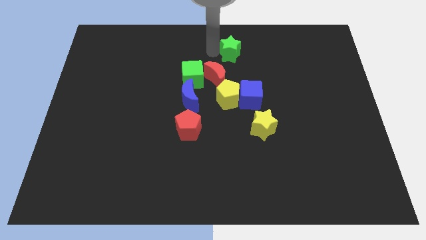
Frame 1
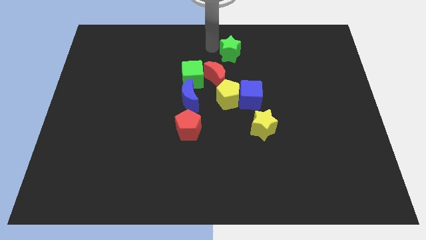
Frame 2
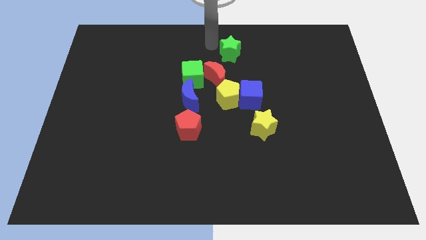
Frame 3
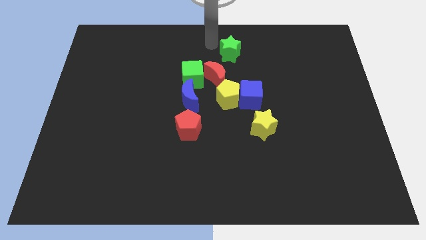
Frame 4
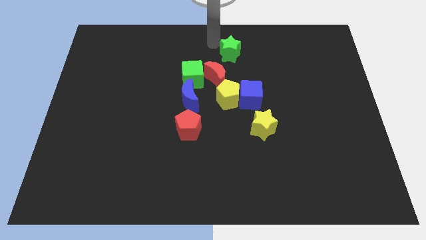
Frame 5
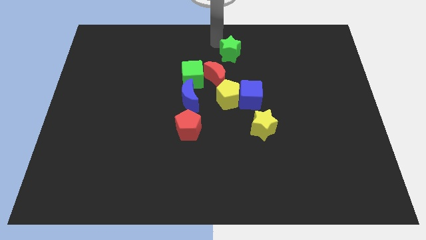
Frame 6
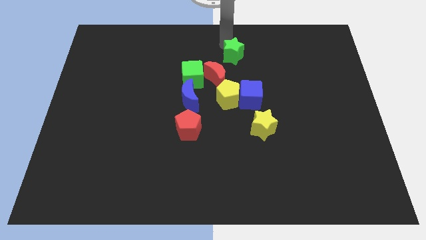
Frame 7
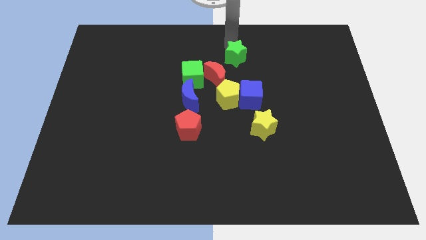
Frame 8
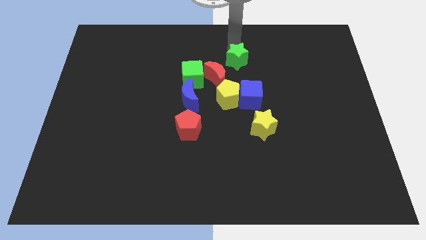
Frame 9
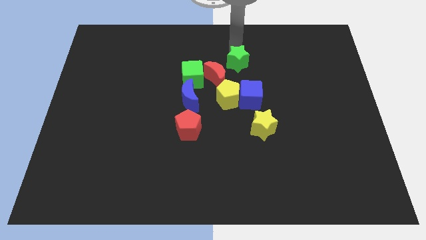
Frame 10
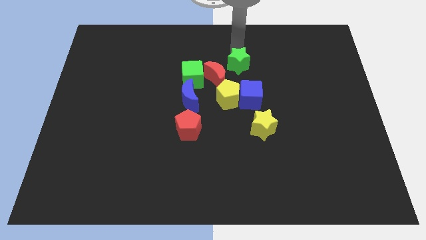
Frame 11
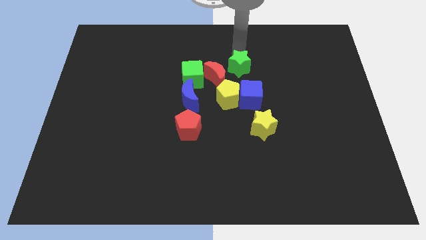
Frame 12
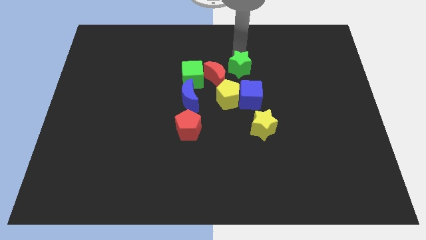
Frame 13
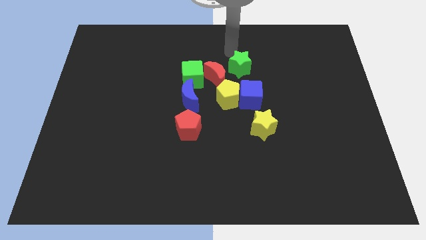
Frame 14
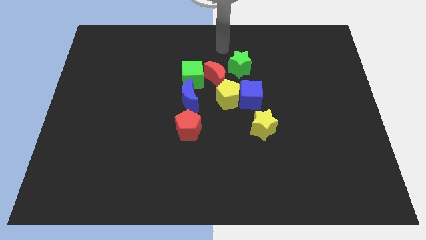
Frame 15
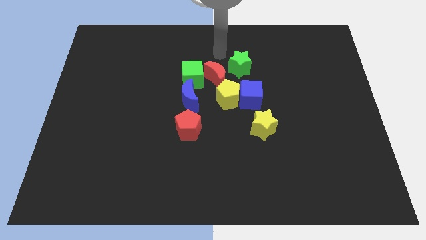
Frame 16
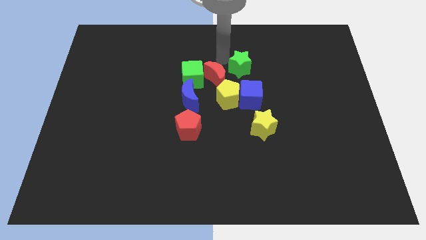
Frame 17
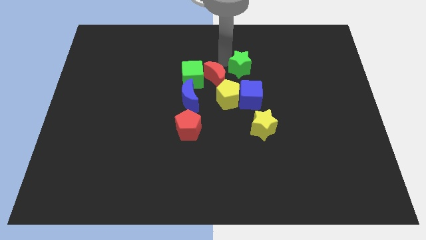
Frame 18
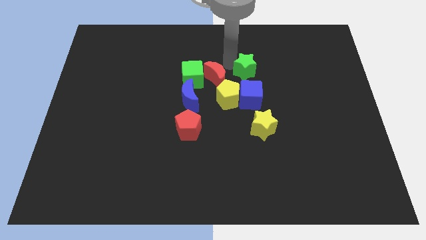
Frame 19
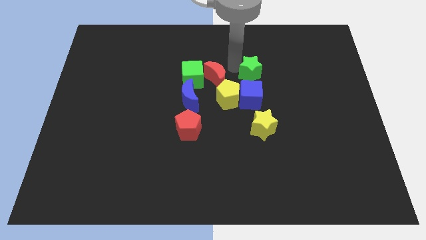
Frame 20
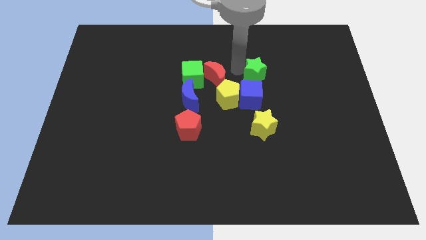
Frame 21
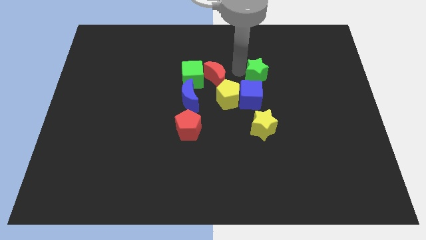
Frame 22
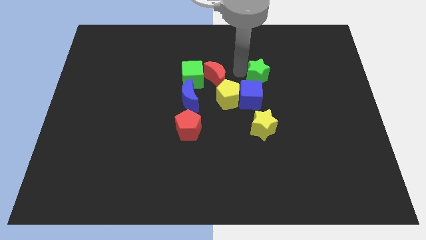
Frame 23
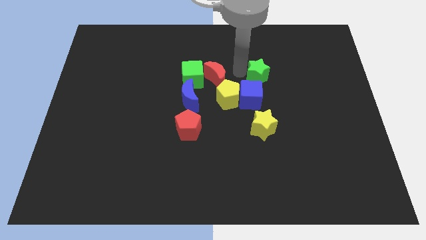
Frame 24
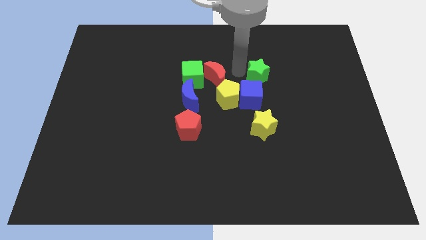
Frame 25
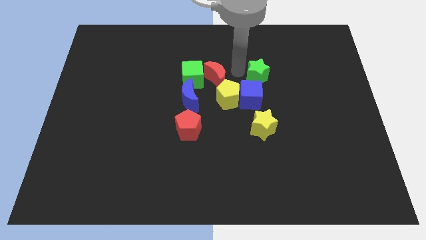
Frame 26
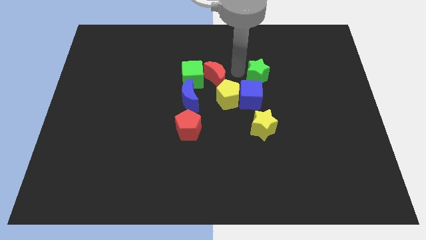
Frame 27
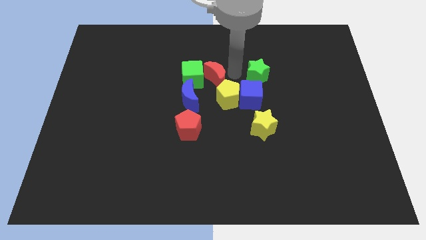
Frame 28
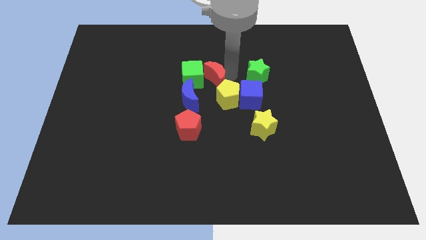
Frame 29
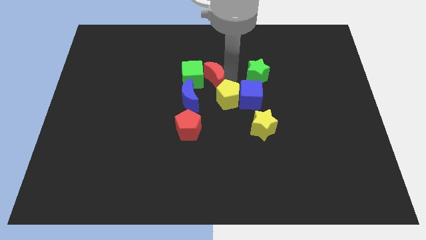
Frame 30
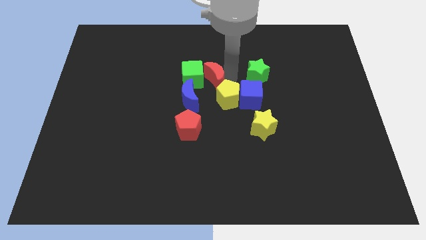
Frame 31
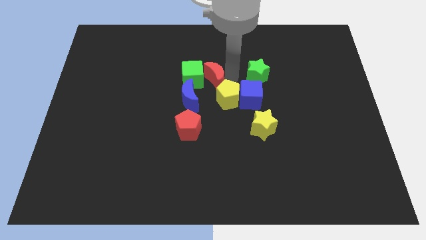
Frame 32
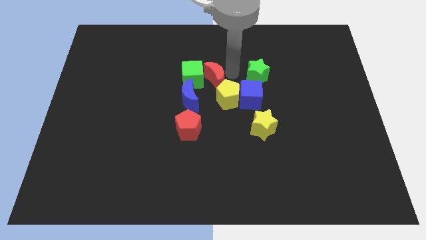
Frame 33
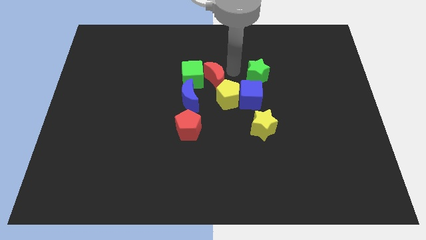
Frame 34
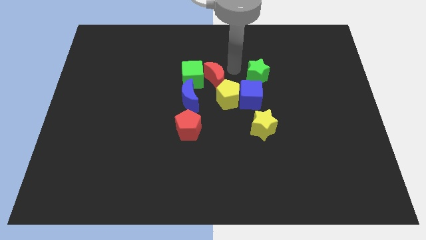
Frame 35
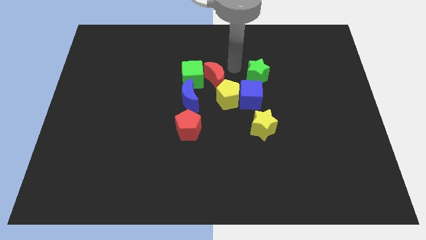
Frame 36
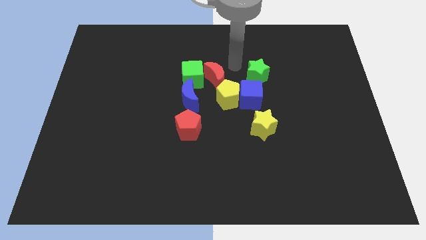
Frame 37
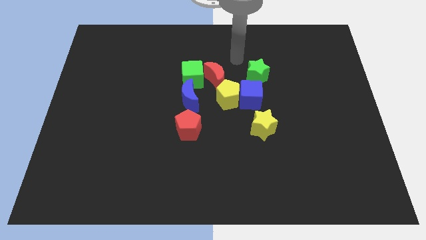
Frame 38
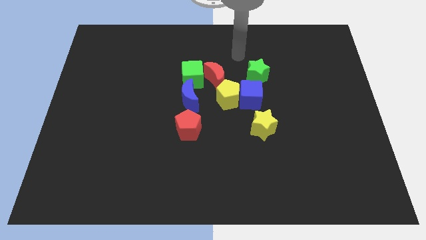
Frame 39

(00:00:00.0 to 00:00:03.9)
push green star into the blue cube

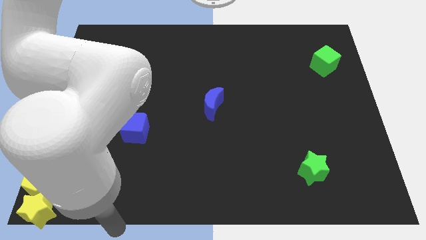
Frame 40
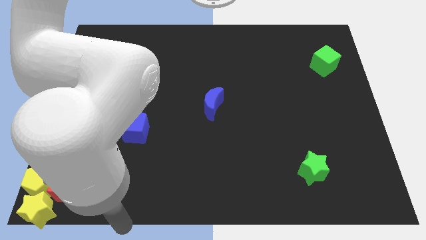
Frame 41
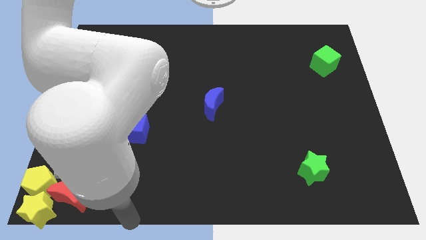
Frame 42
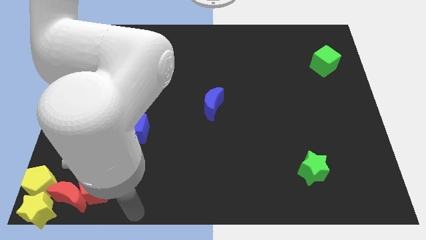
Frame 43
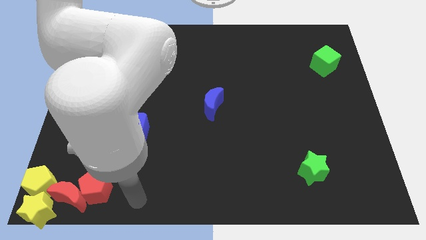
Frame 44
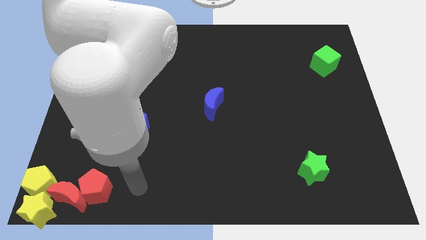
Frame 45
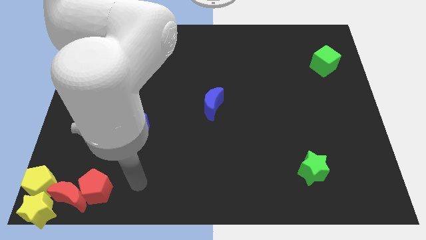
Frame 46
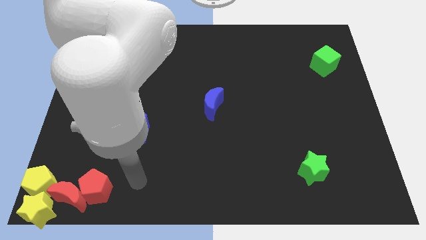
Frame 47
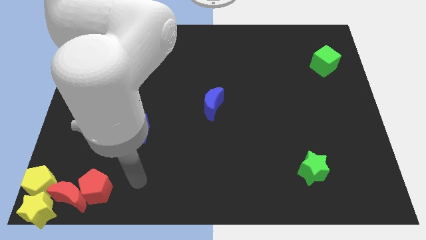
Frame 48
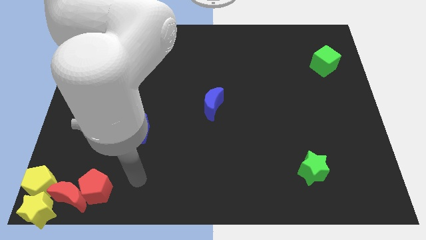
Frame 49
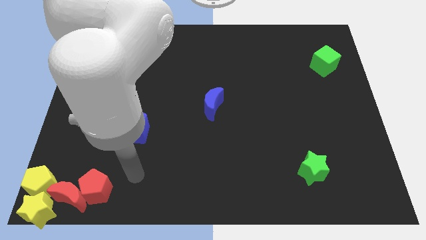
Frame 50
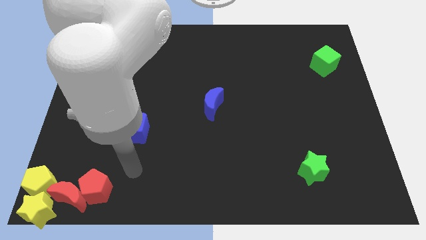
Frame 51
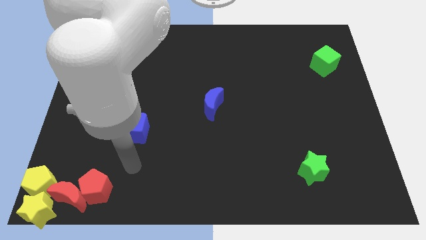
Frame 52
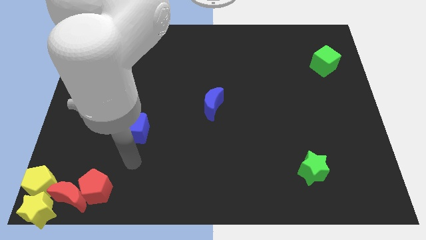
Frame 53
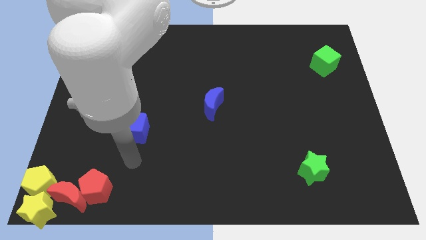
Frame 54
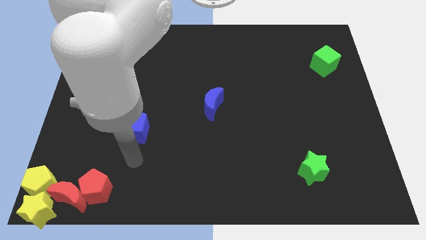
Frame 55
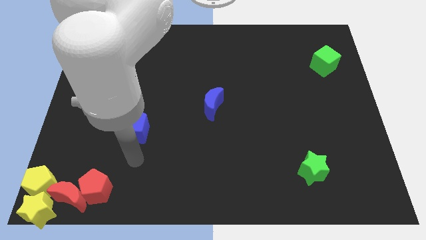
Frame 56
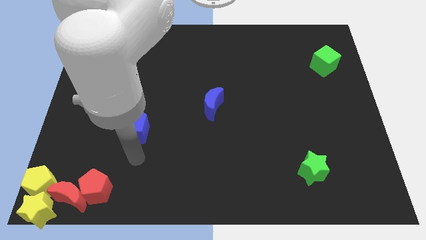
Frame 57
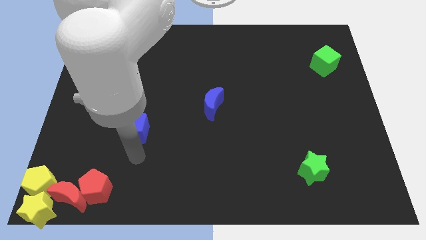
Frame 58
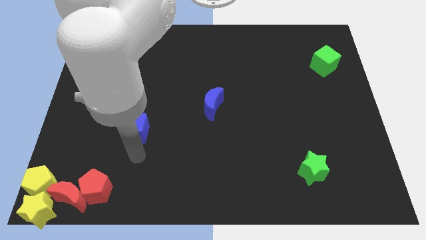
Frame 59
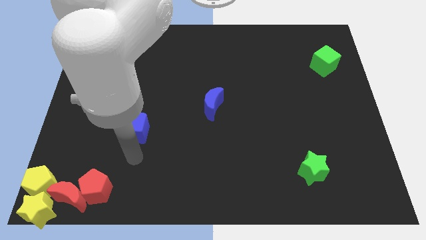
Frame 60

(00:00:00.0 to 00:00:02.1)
move your arm to the bottom of the blue cube

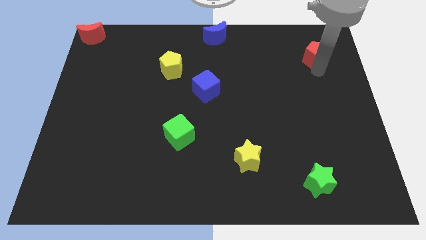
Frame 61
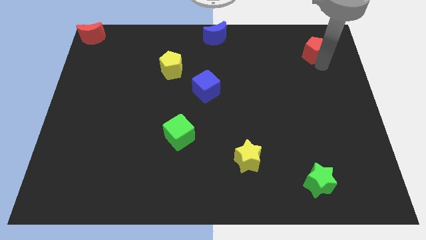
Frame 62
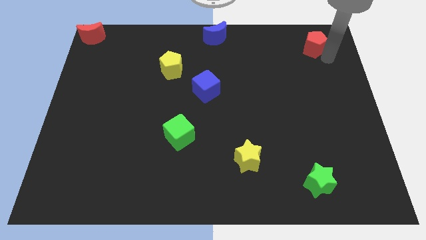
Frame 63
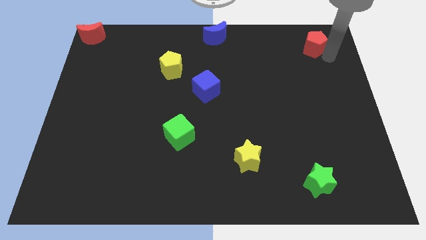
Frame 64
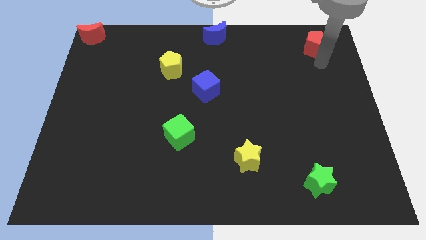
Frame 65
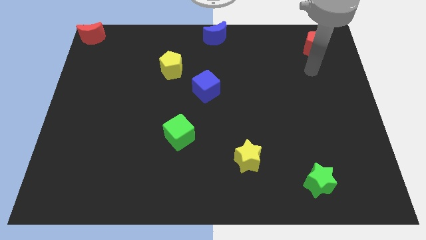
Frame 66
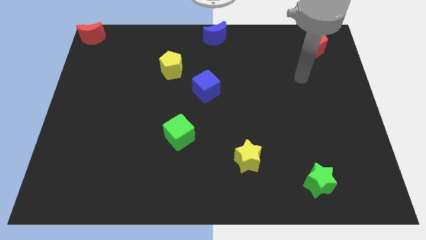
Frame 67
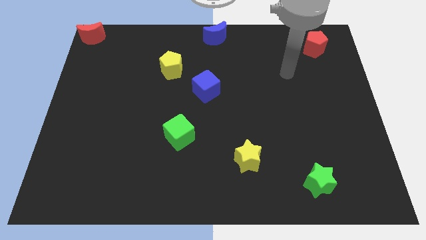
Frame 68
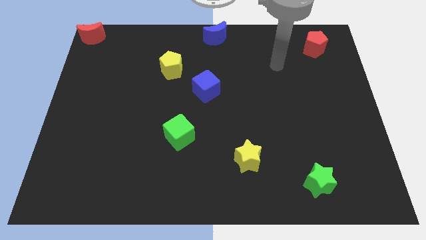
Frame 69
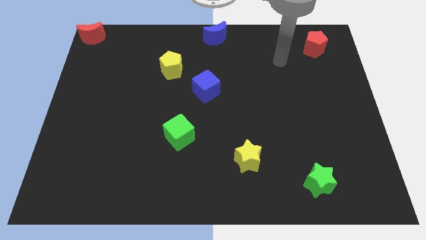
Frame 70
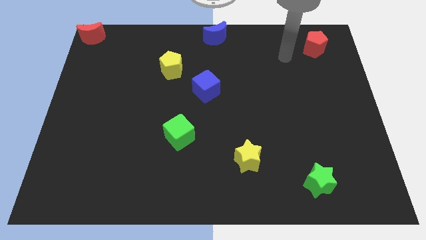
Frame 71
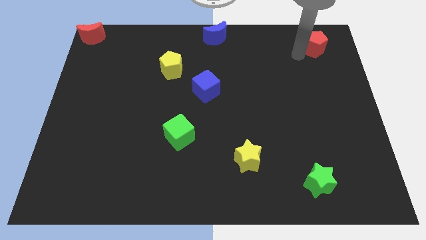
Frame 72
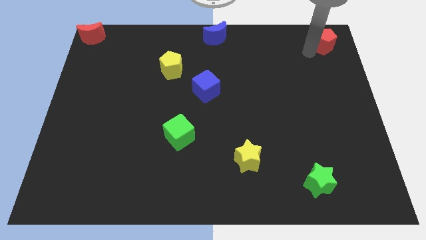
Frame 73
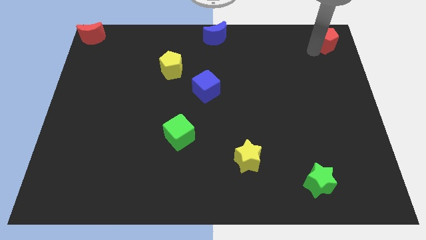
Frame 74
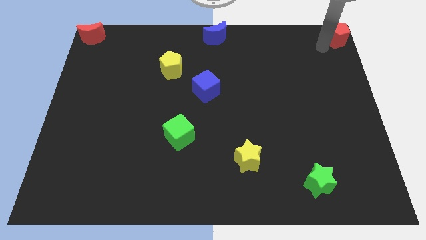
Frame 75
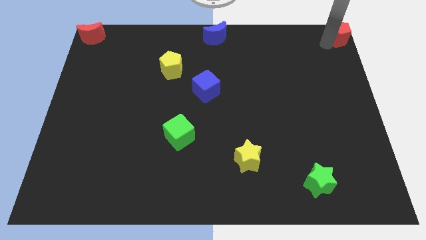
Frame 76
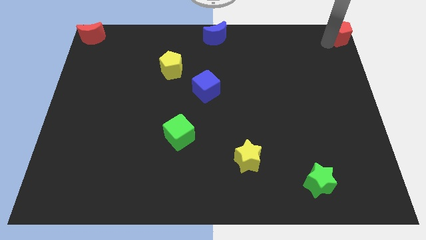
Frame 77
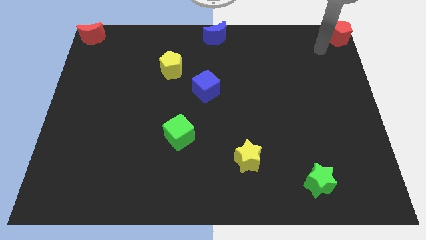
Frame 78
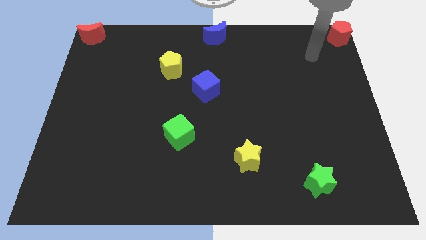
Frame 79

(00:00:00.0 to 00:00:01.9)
place the red pentagon to the top right of the board

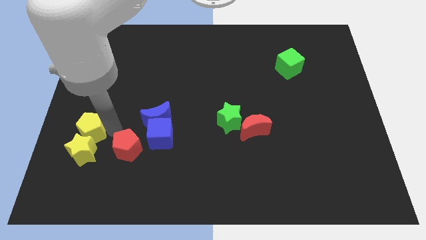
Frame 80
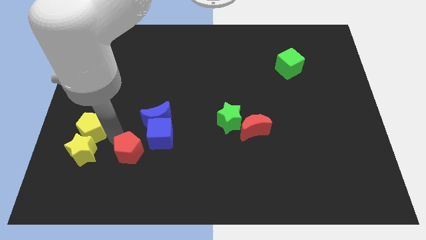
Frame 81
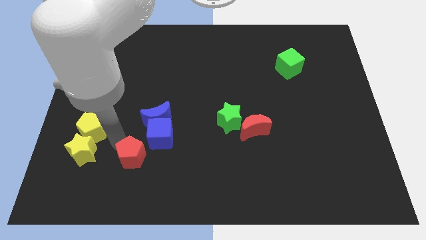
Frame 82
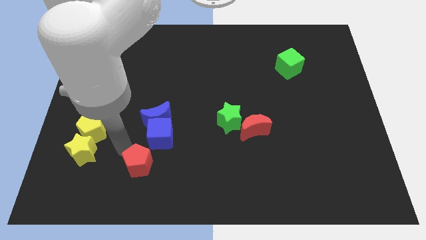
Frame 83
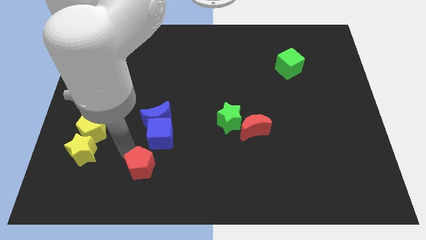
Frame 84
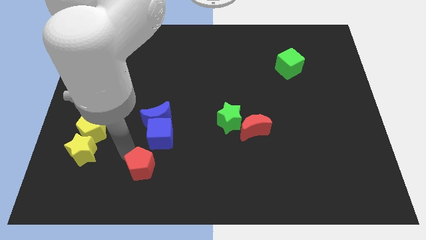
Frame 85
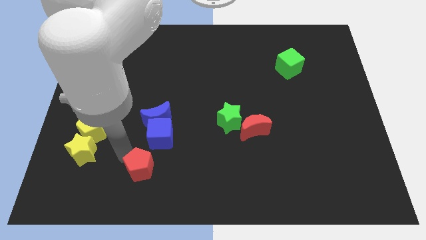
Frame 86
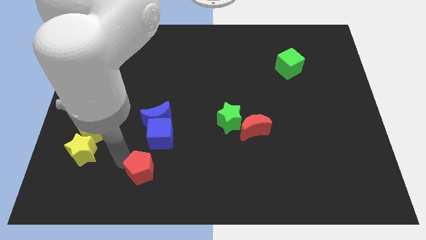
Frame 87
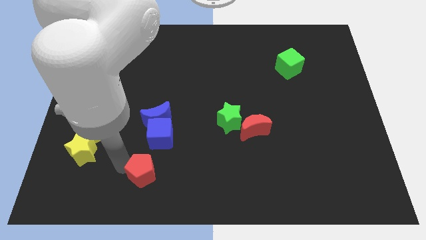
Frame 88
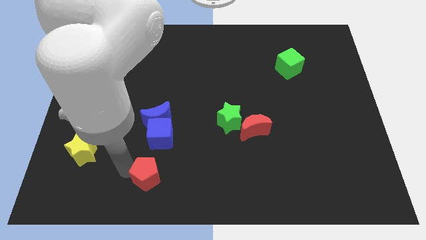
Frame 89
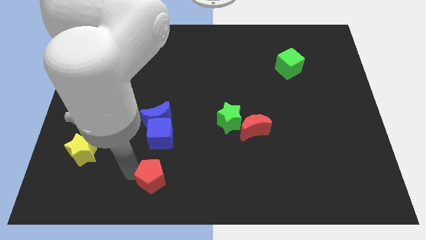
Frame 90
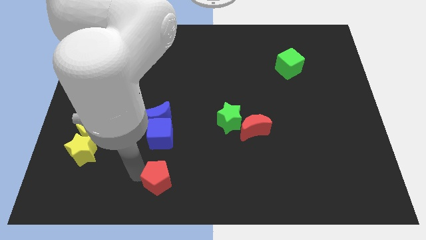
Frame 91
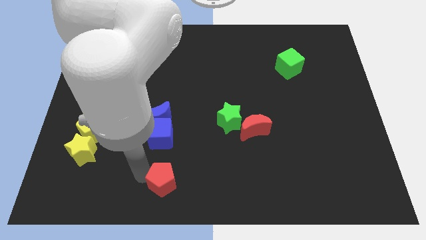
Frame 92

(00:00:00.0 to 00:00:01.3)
move the red pentagon vertical parallel to the blue cube
